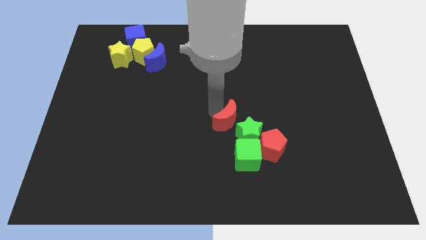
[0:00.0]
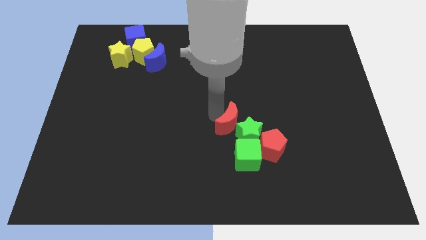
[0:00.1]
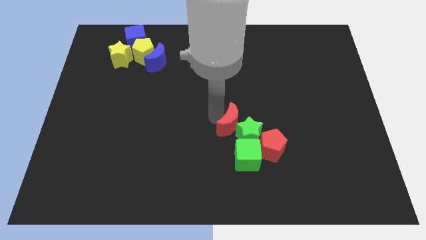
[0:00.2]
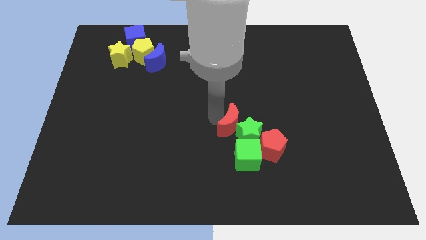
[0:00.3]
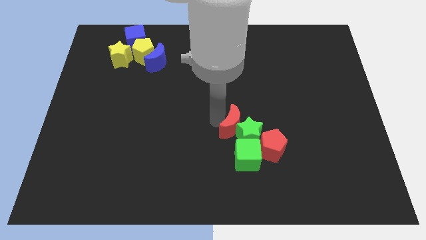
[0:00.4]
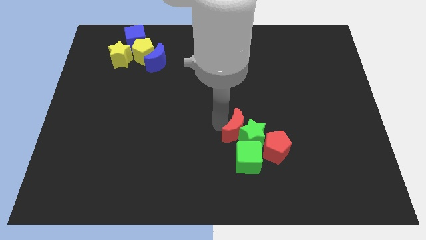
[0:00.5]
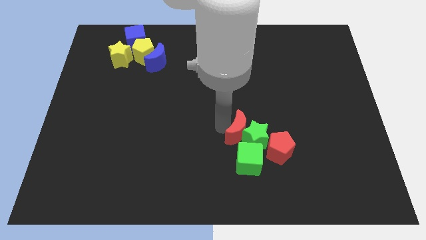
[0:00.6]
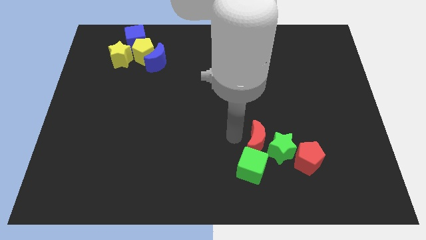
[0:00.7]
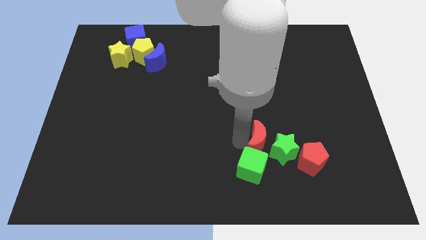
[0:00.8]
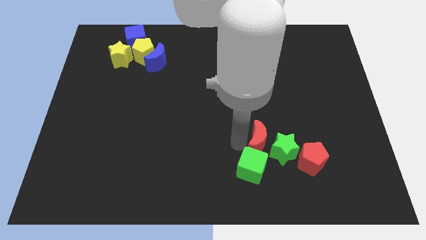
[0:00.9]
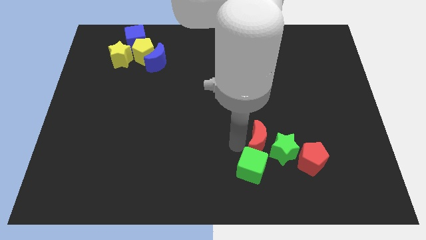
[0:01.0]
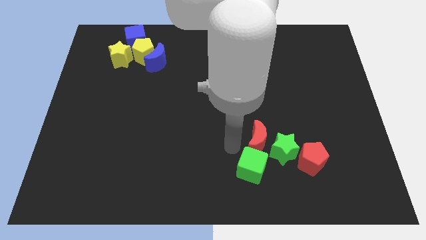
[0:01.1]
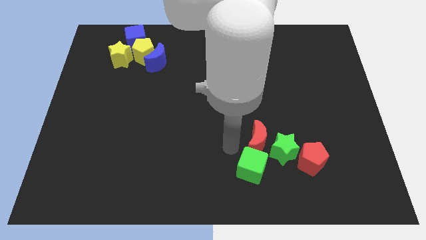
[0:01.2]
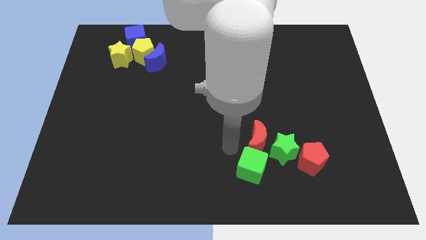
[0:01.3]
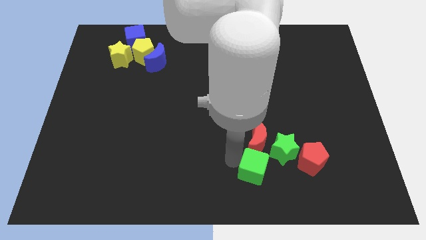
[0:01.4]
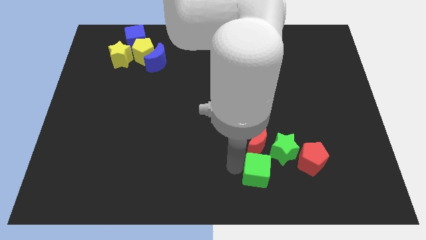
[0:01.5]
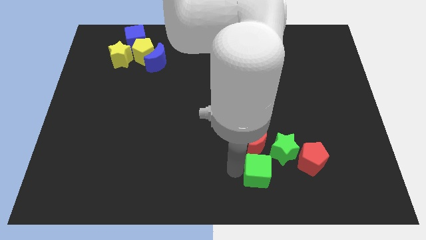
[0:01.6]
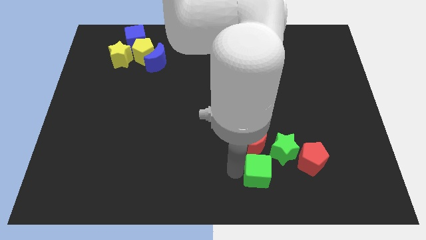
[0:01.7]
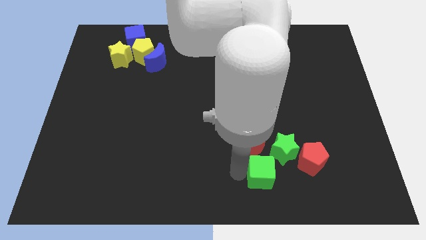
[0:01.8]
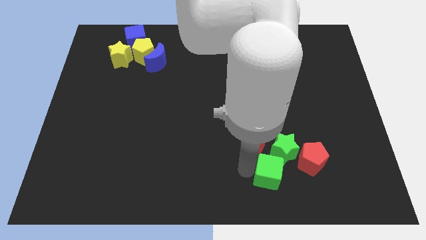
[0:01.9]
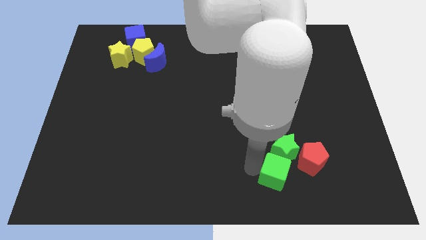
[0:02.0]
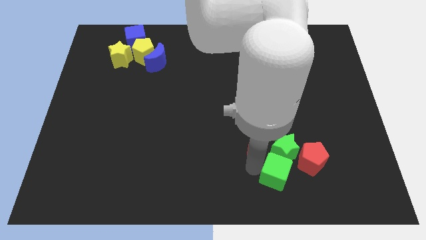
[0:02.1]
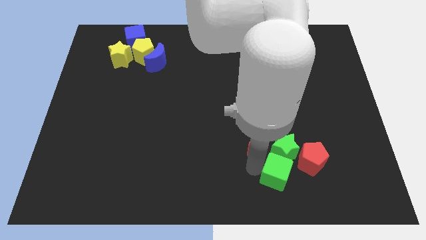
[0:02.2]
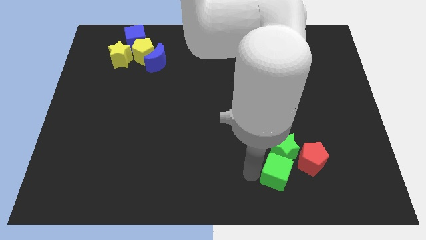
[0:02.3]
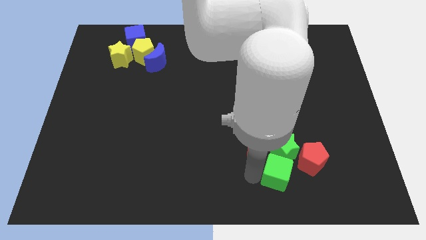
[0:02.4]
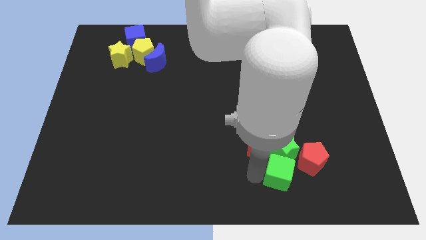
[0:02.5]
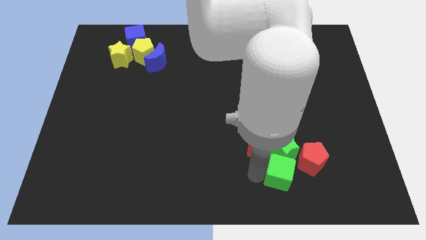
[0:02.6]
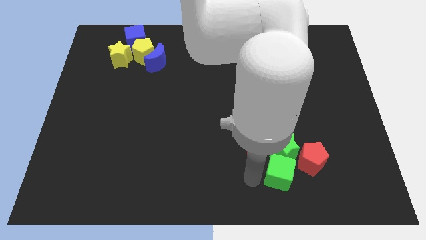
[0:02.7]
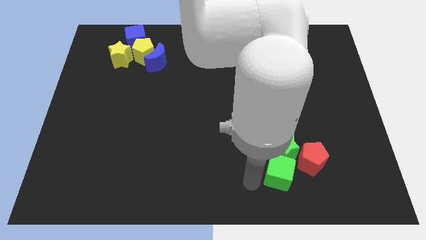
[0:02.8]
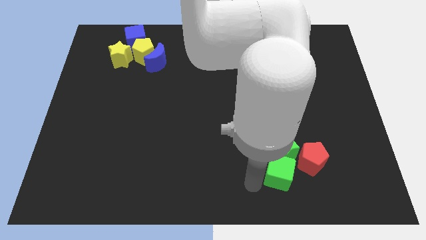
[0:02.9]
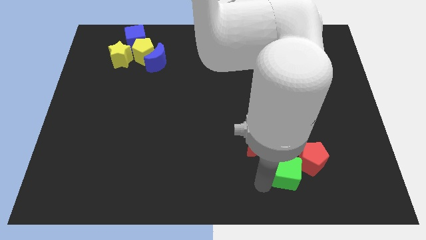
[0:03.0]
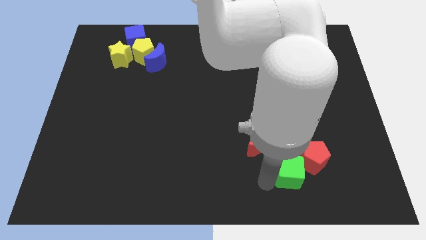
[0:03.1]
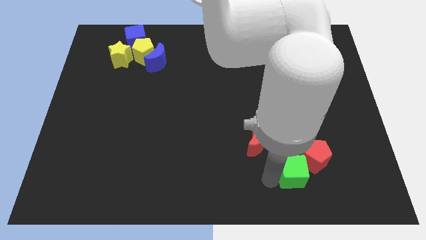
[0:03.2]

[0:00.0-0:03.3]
push the red crescent into green cube and star

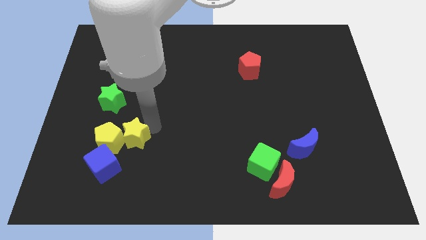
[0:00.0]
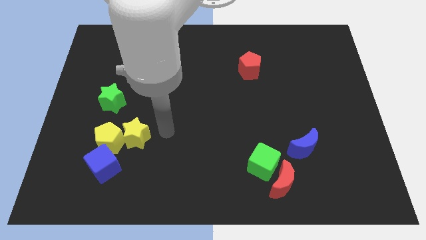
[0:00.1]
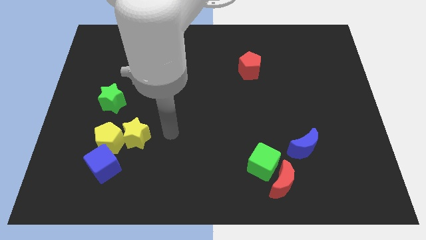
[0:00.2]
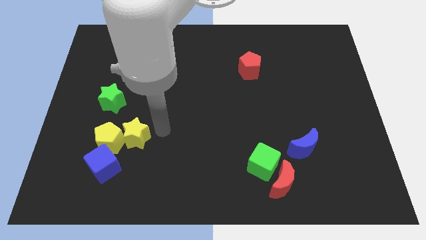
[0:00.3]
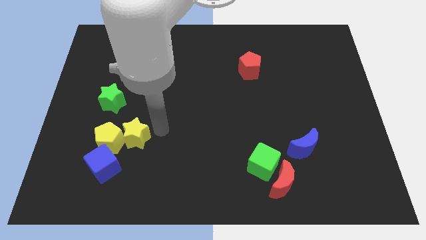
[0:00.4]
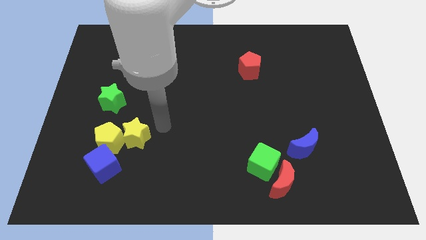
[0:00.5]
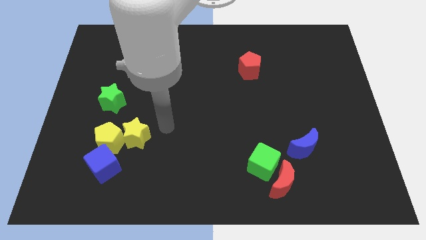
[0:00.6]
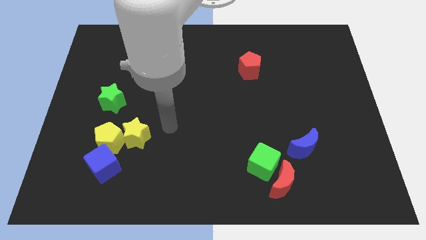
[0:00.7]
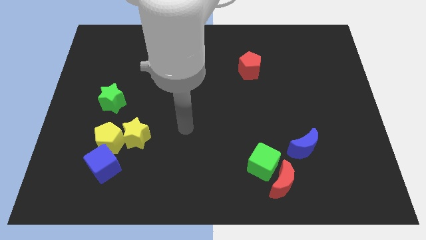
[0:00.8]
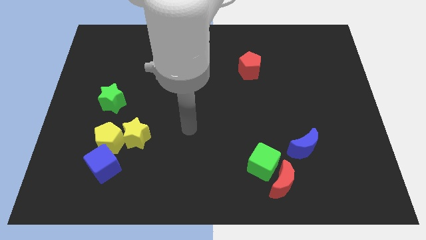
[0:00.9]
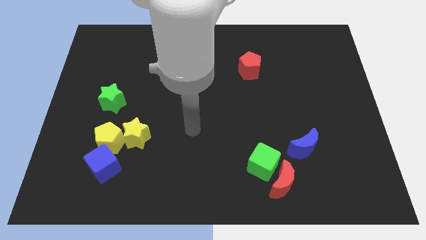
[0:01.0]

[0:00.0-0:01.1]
move your arm away from yellow star

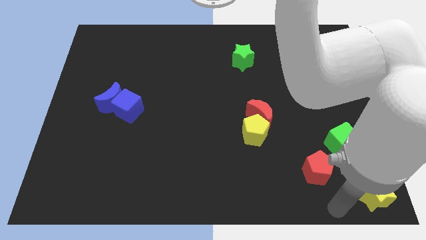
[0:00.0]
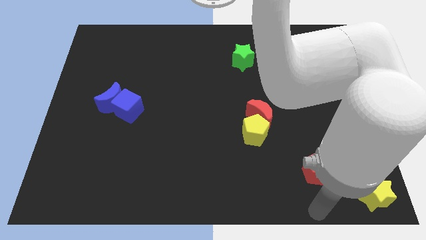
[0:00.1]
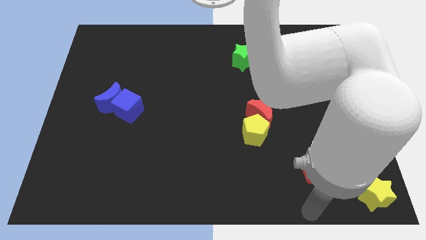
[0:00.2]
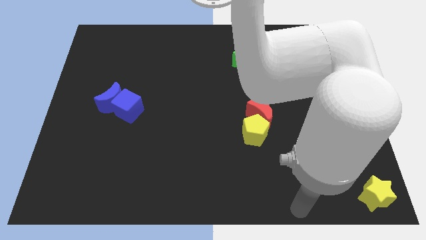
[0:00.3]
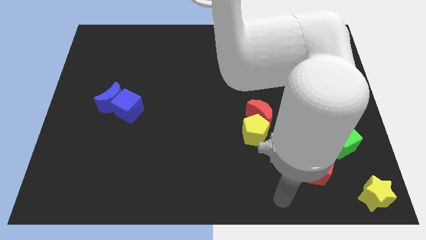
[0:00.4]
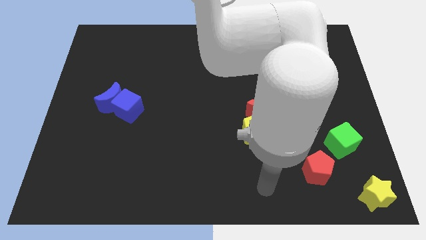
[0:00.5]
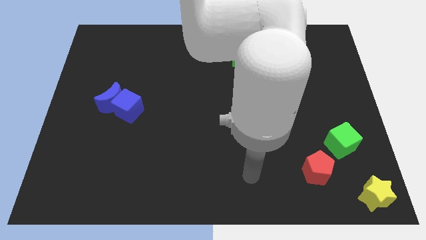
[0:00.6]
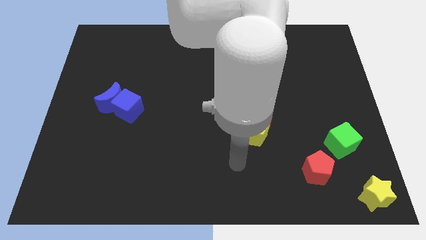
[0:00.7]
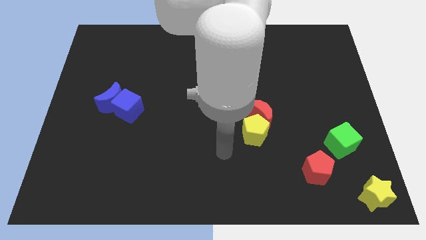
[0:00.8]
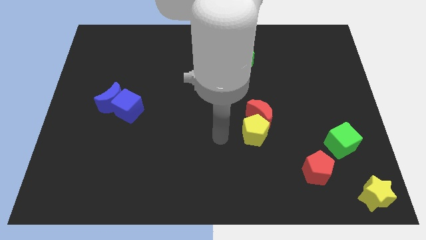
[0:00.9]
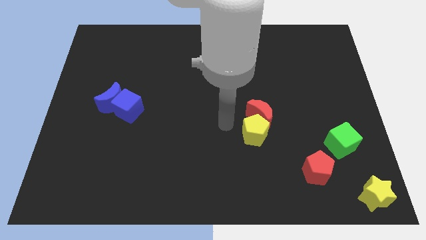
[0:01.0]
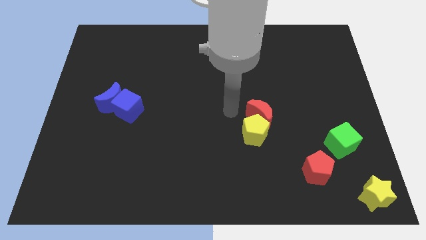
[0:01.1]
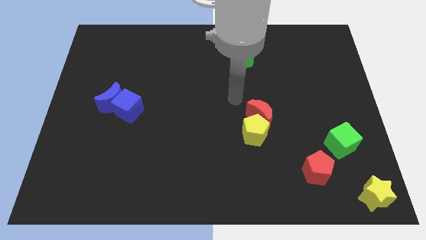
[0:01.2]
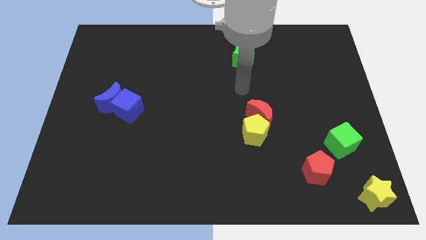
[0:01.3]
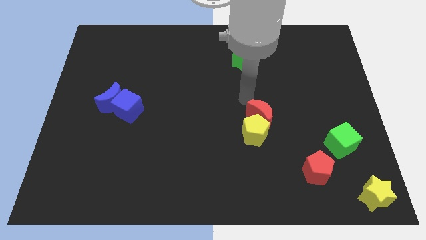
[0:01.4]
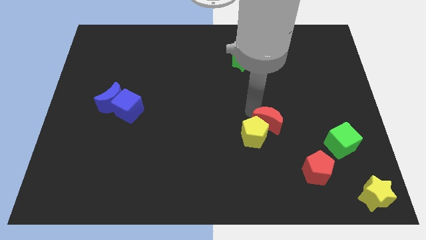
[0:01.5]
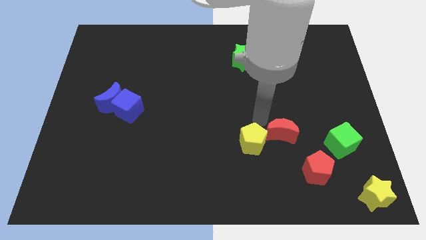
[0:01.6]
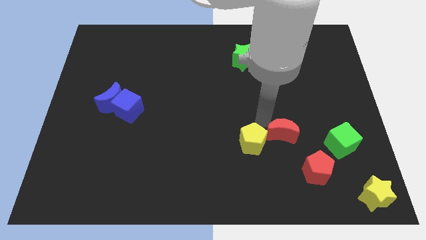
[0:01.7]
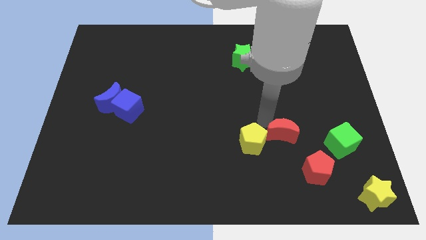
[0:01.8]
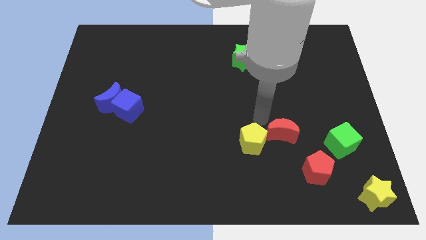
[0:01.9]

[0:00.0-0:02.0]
place the red crescent diagonally bottom right to the green star

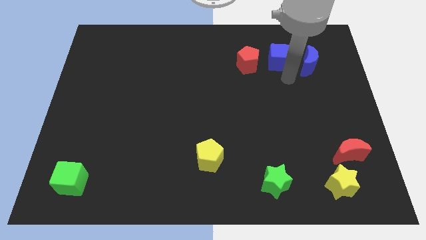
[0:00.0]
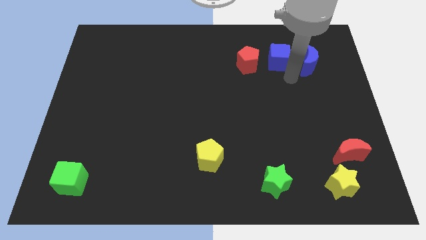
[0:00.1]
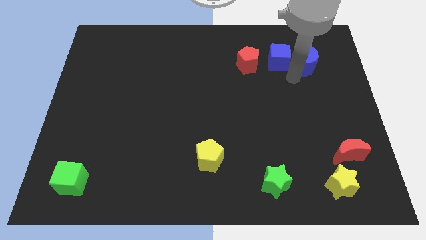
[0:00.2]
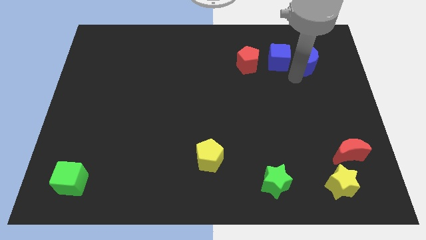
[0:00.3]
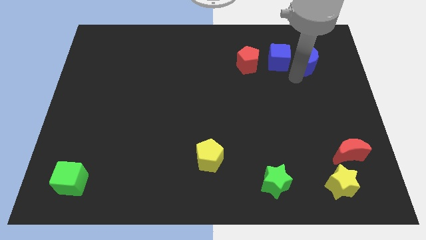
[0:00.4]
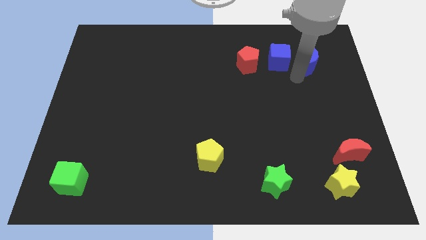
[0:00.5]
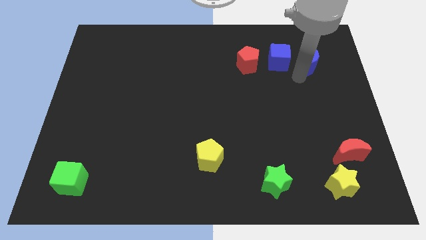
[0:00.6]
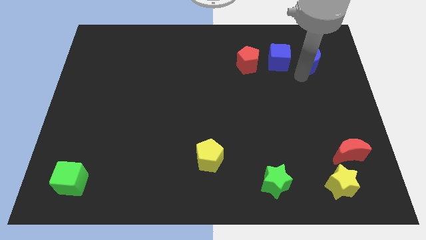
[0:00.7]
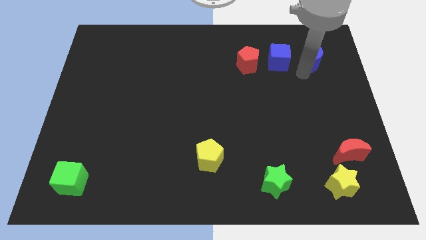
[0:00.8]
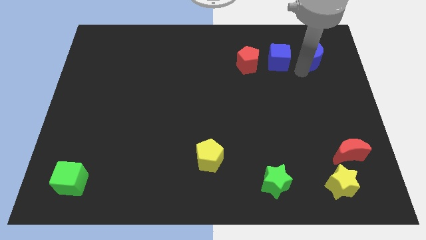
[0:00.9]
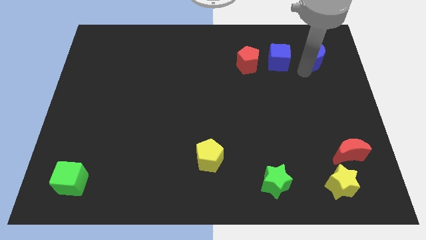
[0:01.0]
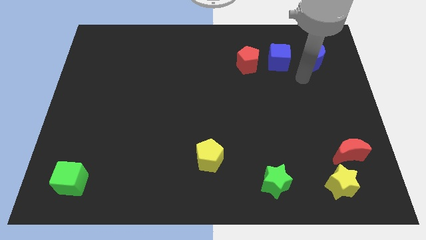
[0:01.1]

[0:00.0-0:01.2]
slightly push the blue crescent to right

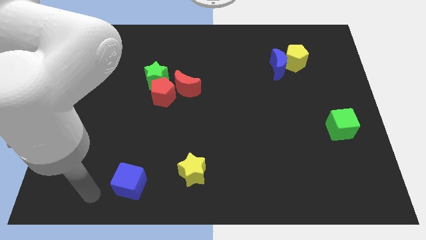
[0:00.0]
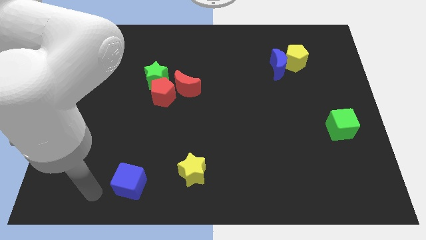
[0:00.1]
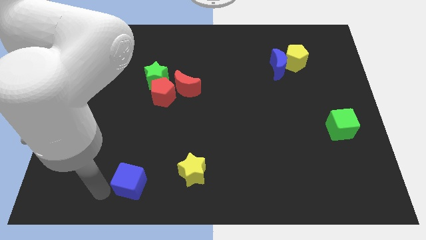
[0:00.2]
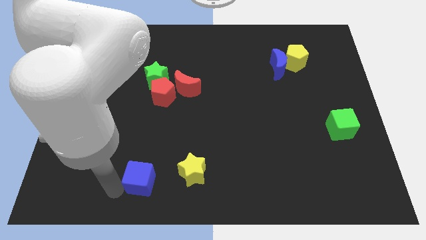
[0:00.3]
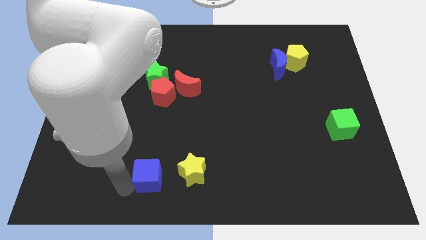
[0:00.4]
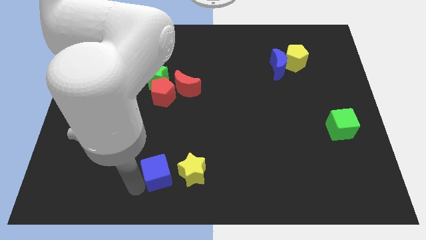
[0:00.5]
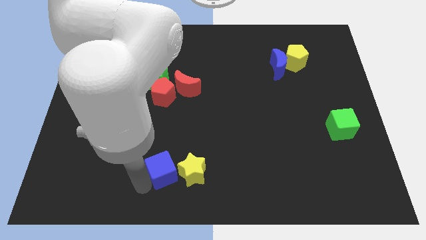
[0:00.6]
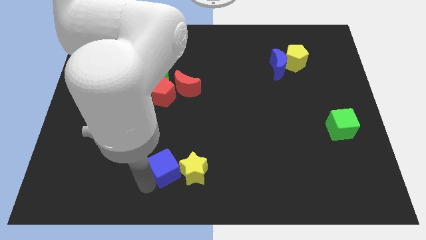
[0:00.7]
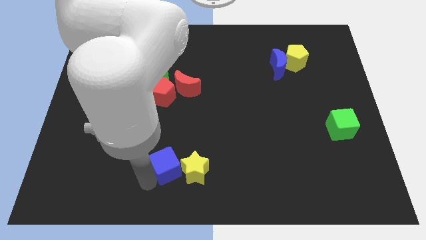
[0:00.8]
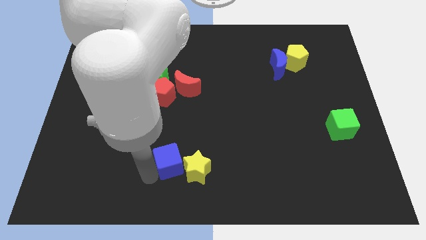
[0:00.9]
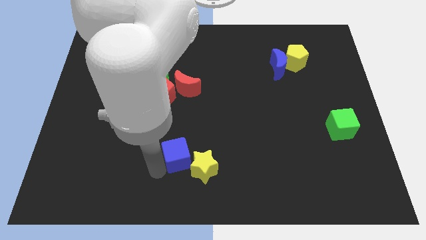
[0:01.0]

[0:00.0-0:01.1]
push the blue cube to the left of the yellow star

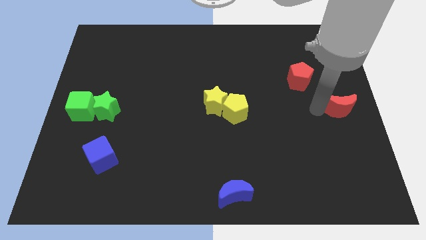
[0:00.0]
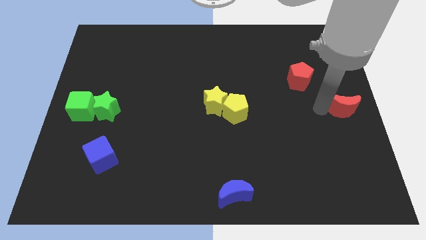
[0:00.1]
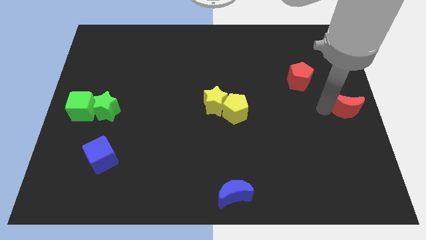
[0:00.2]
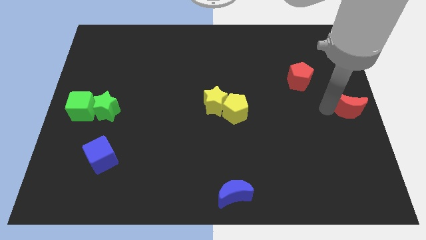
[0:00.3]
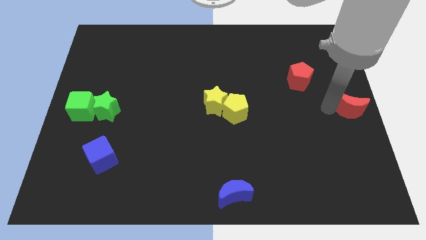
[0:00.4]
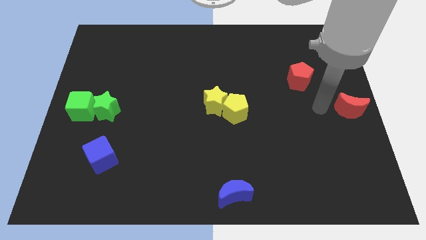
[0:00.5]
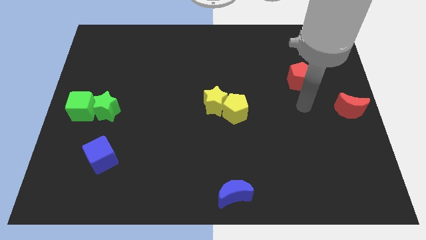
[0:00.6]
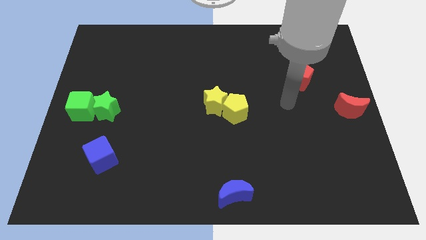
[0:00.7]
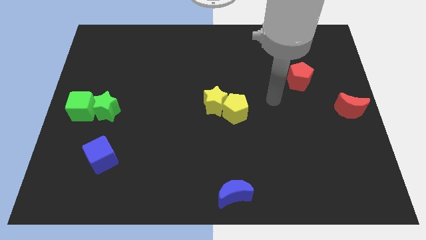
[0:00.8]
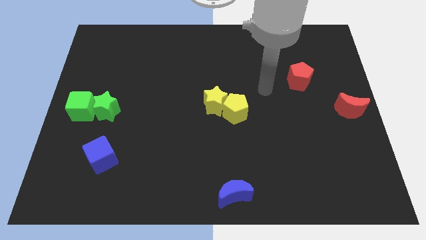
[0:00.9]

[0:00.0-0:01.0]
move the red crescent to the right center of the board
